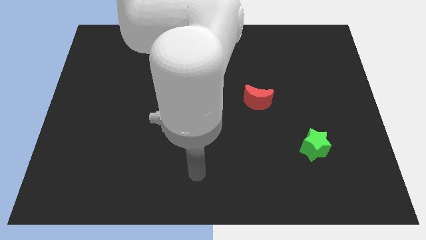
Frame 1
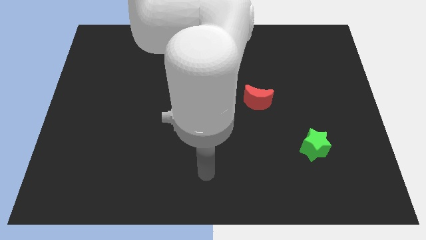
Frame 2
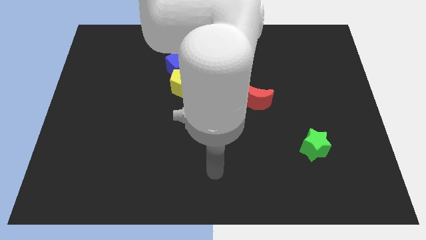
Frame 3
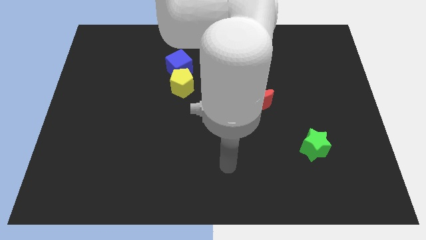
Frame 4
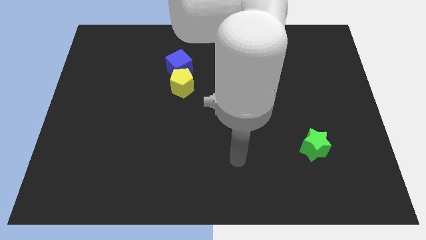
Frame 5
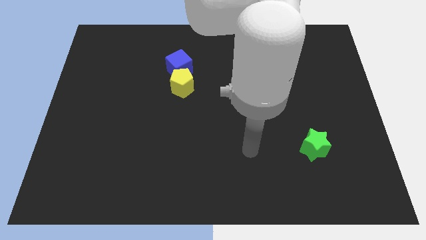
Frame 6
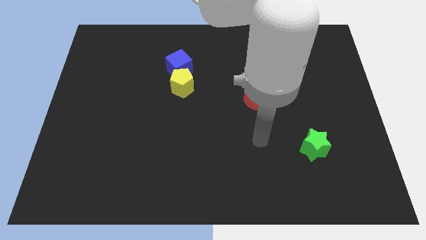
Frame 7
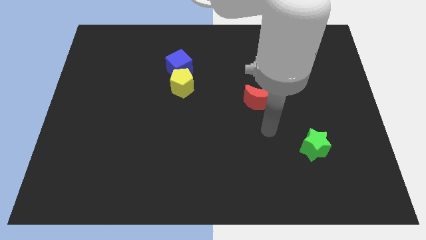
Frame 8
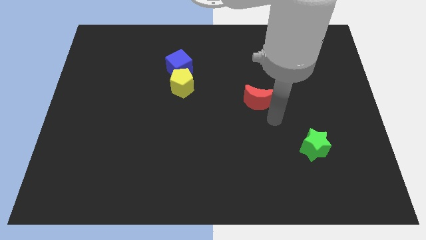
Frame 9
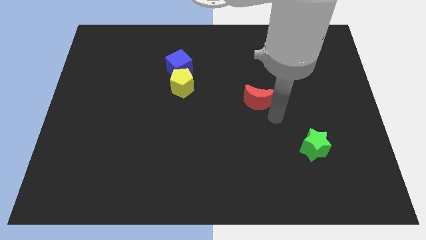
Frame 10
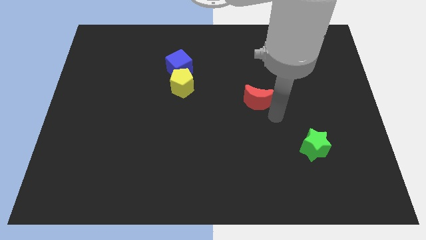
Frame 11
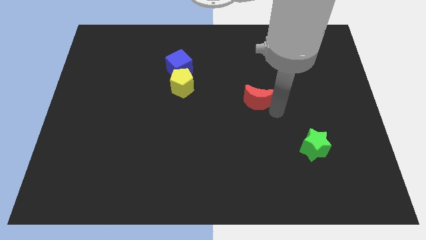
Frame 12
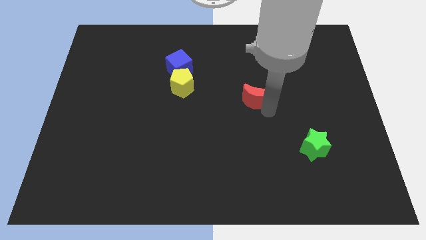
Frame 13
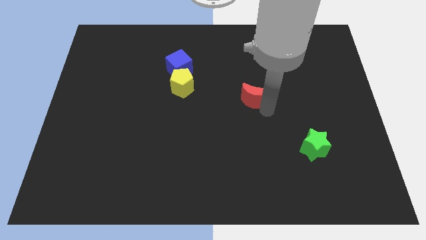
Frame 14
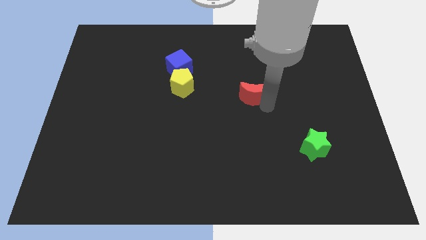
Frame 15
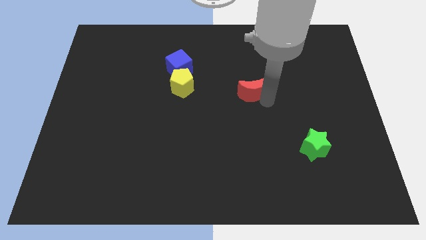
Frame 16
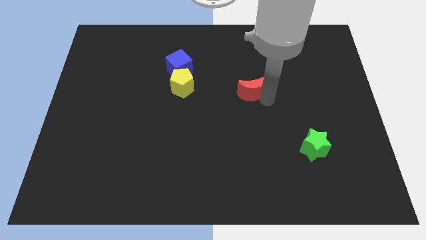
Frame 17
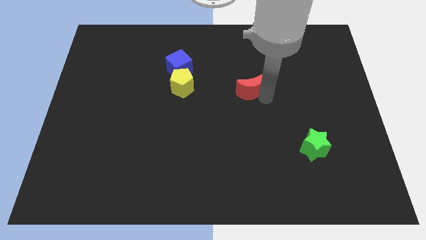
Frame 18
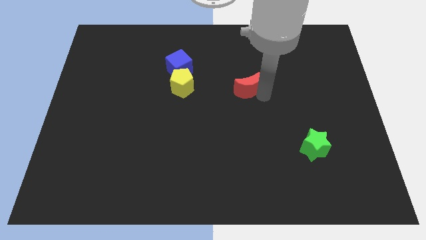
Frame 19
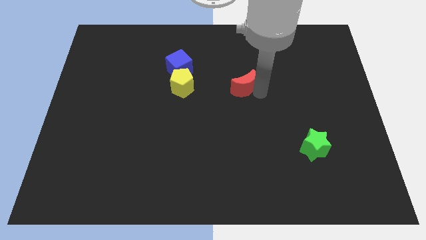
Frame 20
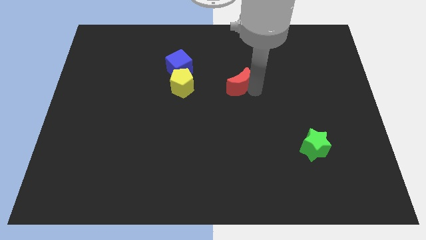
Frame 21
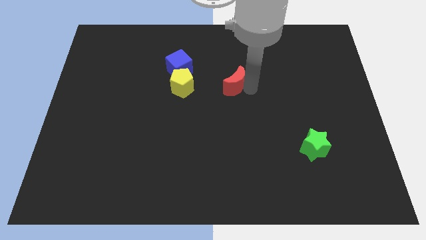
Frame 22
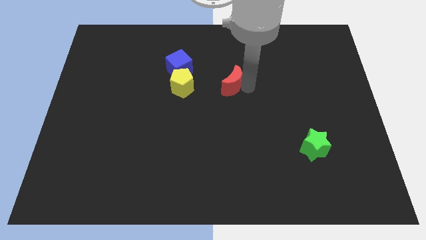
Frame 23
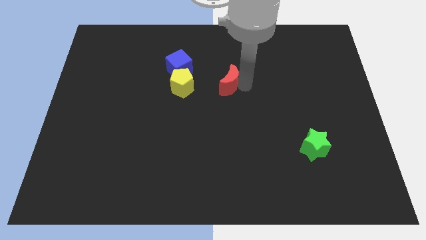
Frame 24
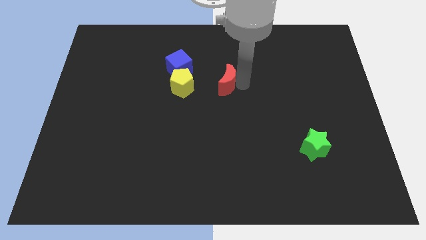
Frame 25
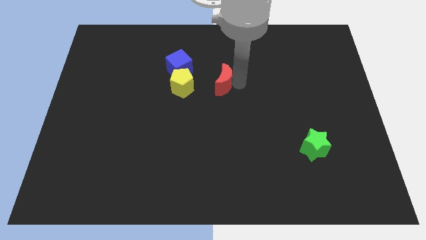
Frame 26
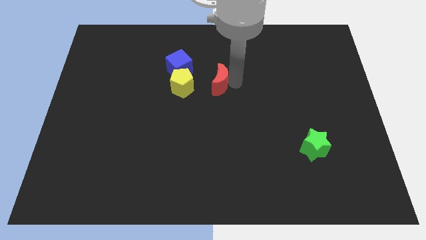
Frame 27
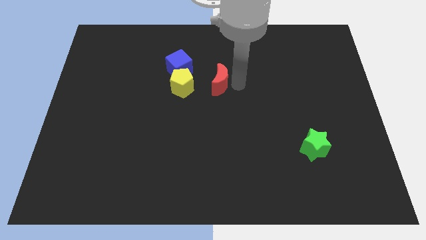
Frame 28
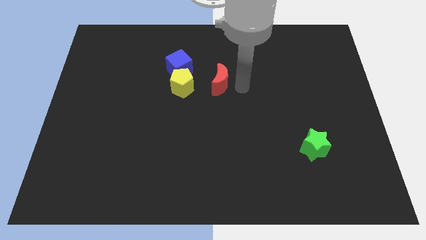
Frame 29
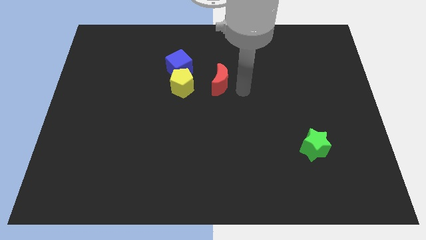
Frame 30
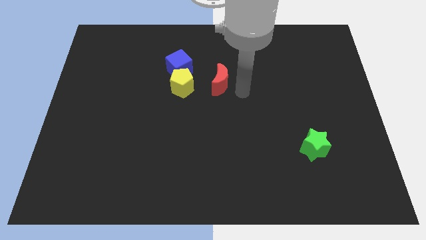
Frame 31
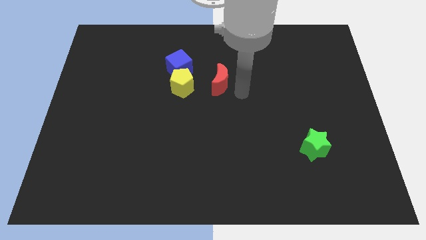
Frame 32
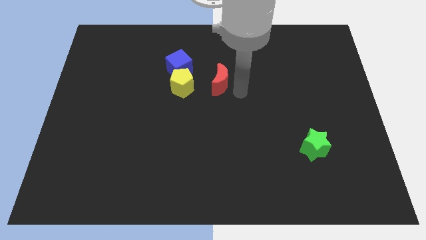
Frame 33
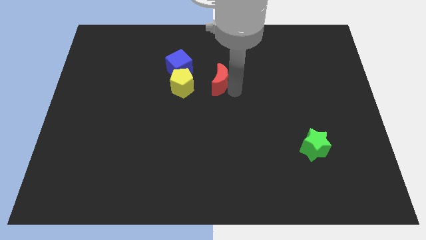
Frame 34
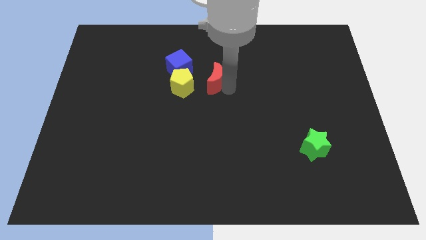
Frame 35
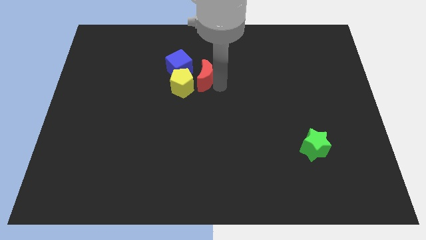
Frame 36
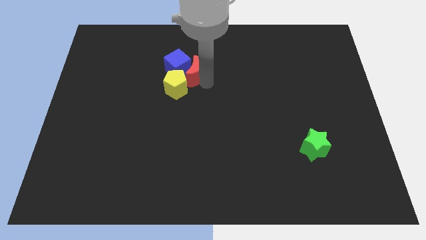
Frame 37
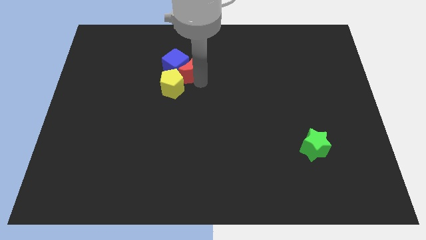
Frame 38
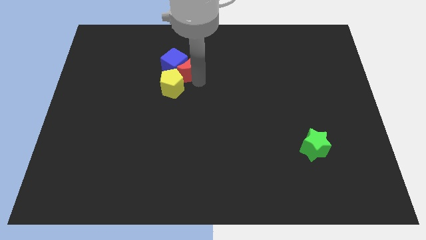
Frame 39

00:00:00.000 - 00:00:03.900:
slide the red block close to the cube

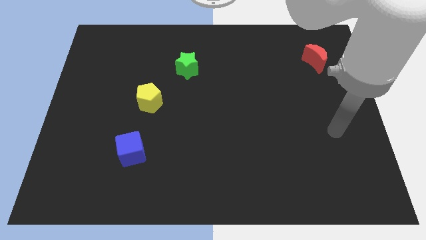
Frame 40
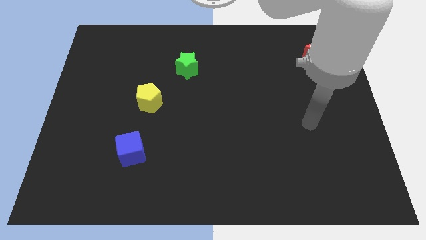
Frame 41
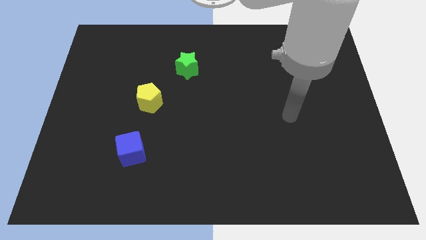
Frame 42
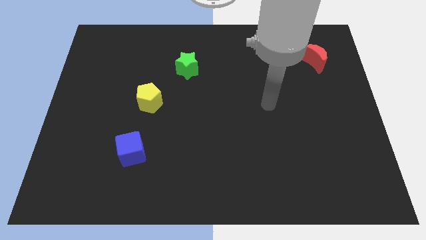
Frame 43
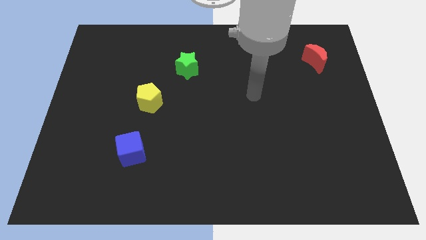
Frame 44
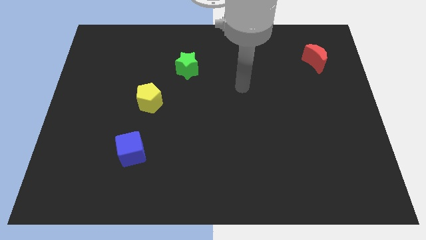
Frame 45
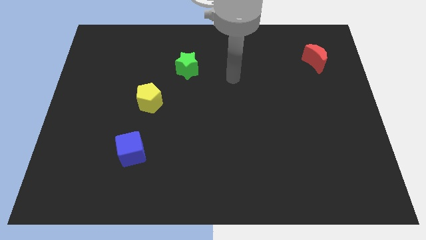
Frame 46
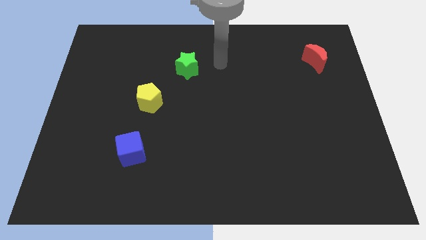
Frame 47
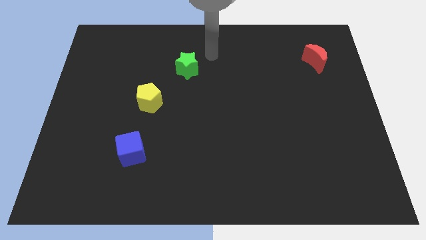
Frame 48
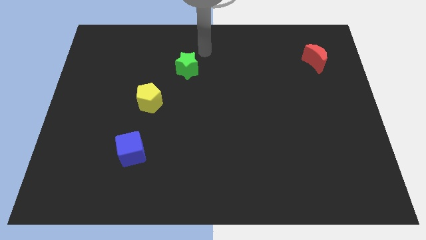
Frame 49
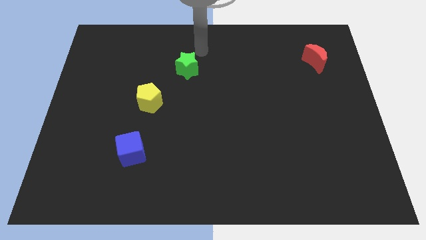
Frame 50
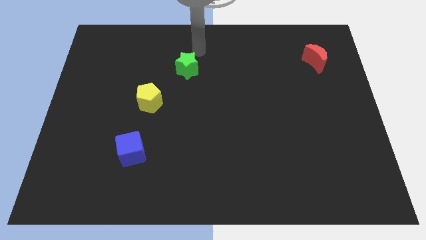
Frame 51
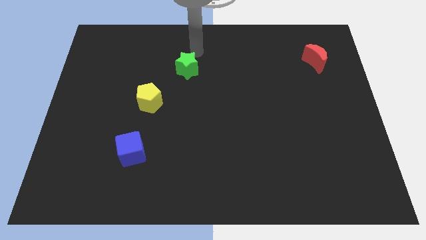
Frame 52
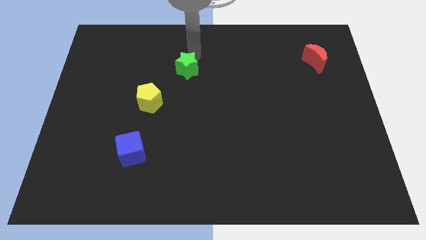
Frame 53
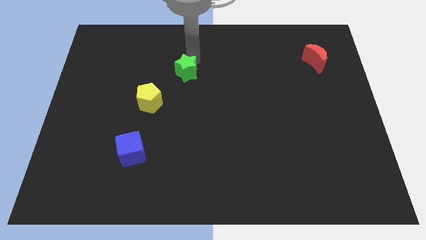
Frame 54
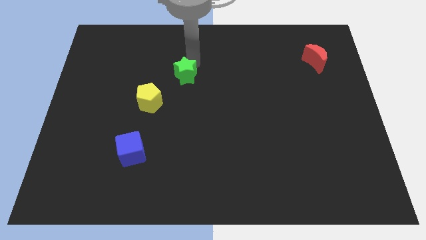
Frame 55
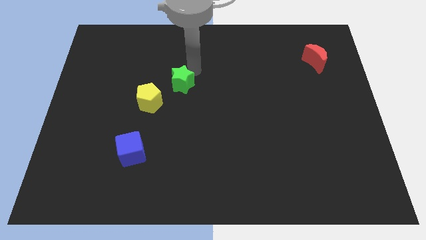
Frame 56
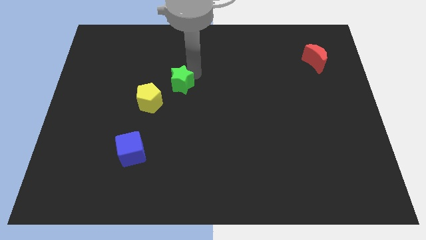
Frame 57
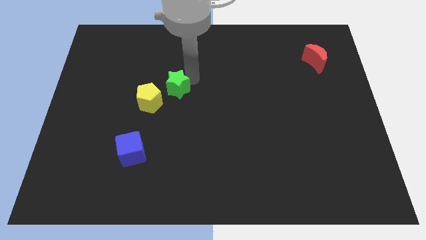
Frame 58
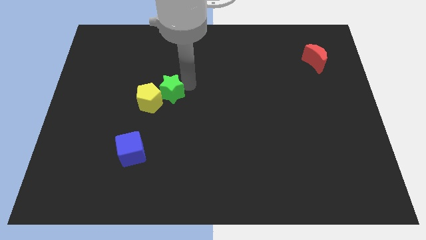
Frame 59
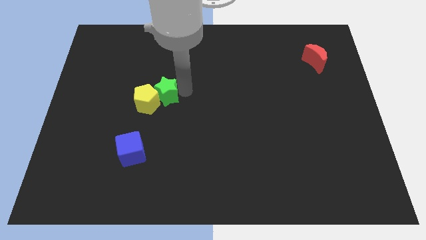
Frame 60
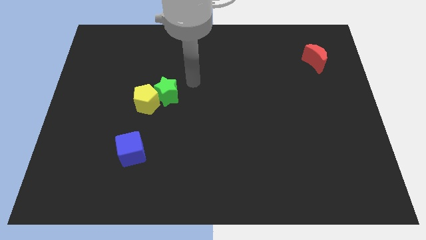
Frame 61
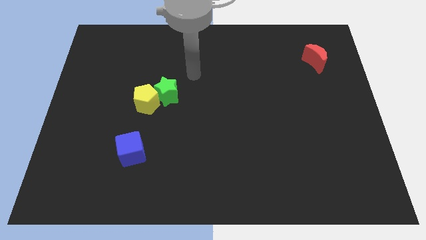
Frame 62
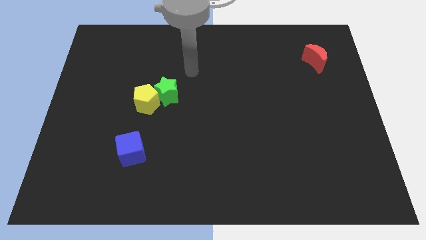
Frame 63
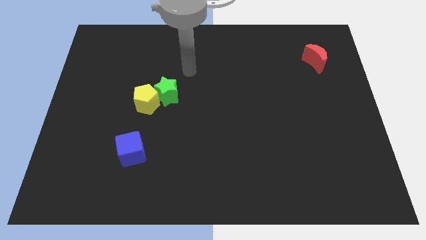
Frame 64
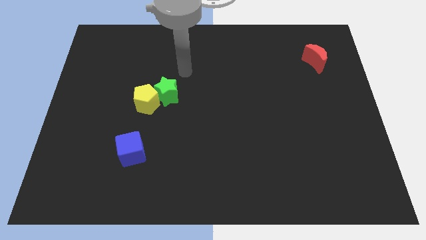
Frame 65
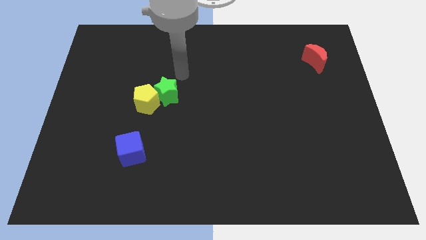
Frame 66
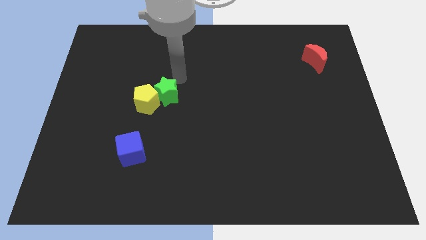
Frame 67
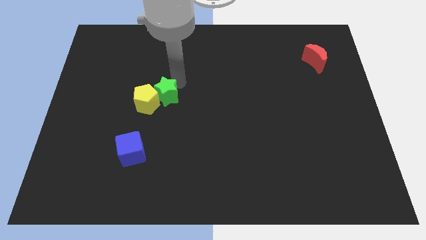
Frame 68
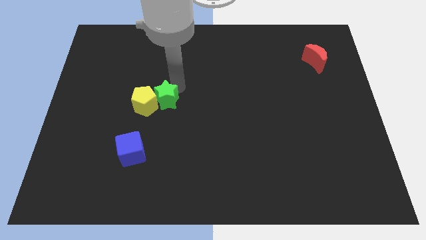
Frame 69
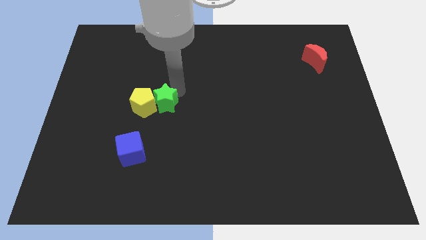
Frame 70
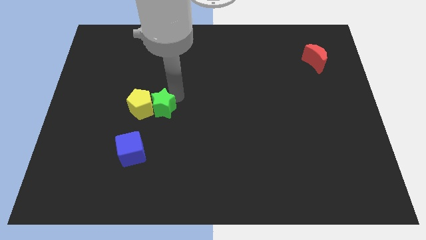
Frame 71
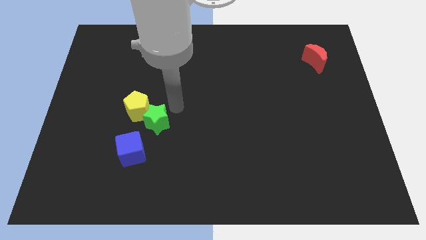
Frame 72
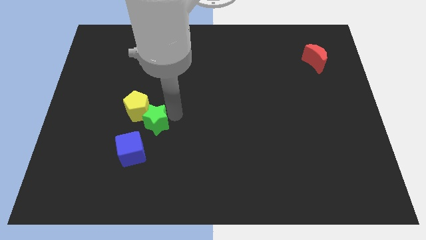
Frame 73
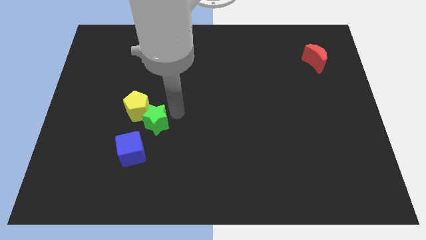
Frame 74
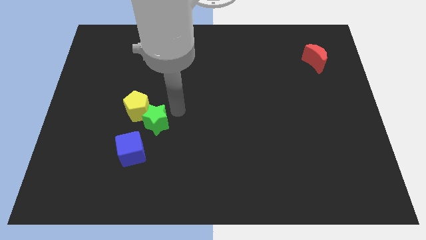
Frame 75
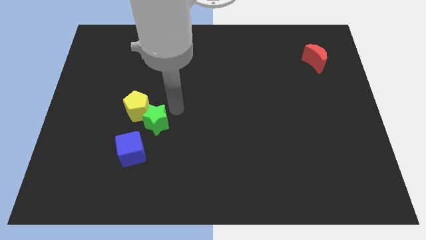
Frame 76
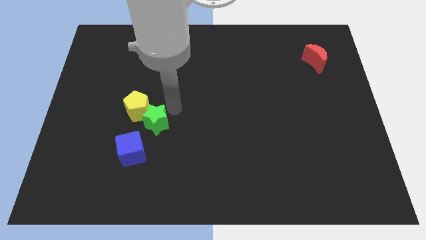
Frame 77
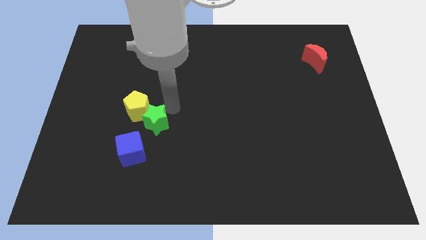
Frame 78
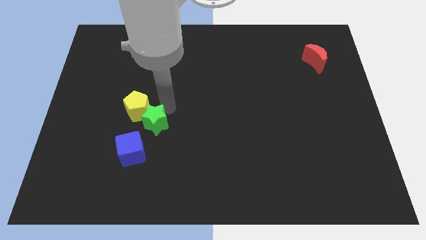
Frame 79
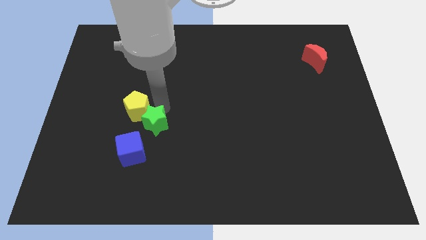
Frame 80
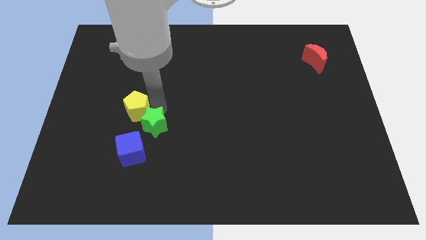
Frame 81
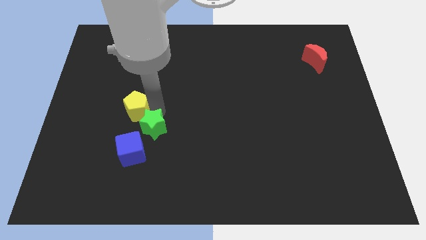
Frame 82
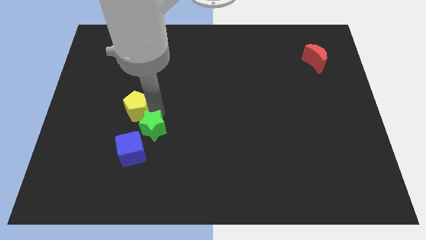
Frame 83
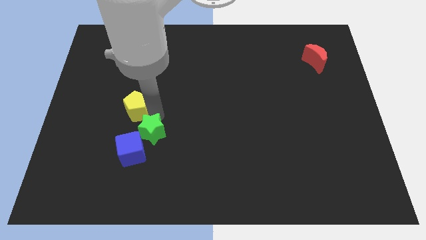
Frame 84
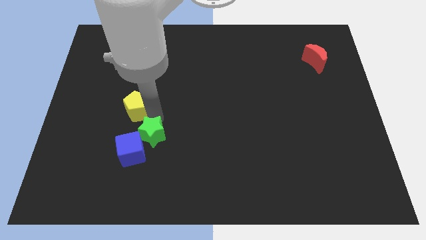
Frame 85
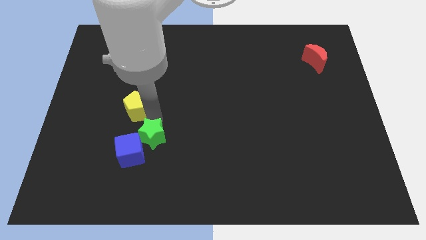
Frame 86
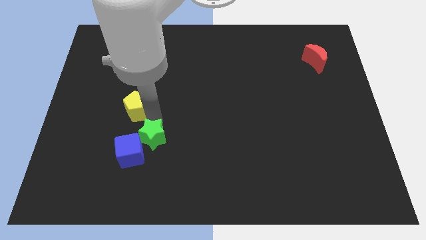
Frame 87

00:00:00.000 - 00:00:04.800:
slide the star next to the blue cube
